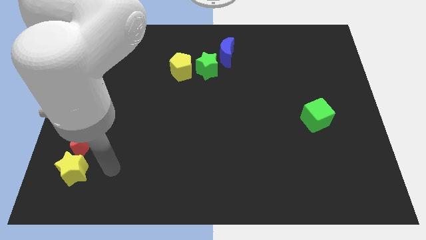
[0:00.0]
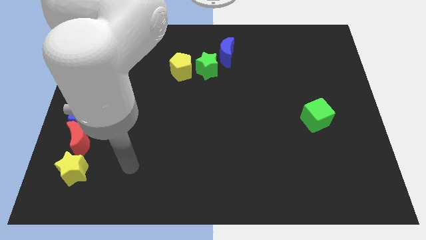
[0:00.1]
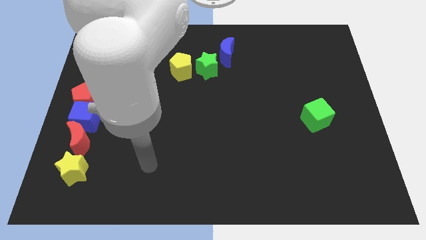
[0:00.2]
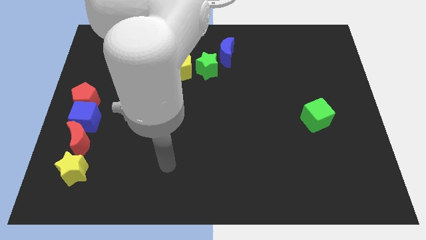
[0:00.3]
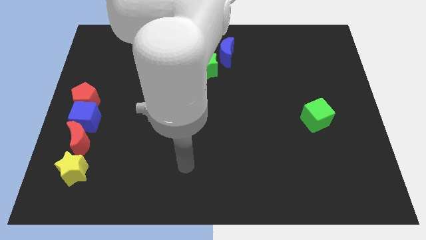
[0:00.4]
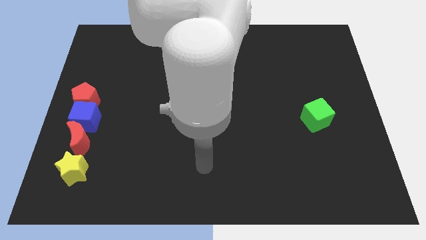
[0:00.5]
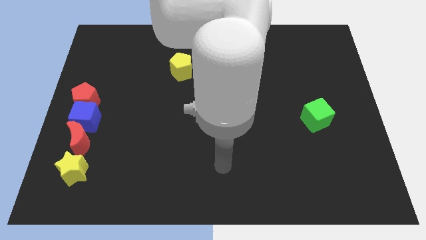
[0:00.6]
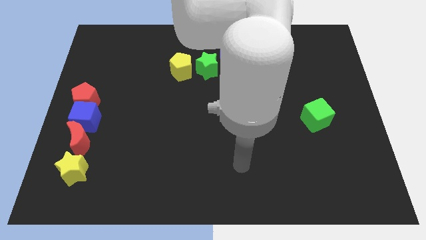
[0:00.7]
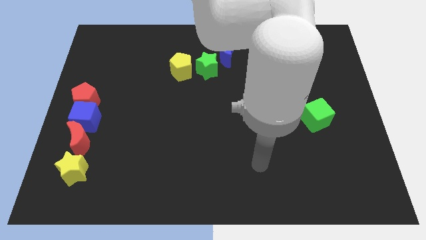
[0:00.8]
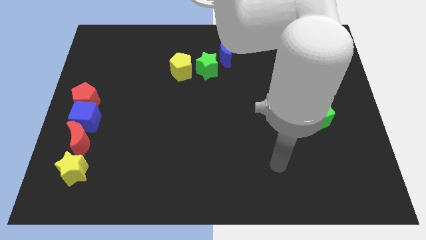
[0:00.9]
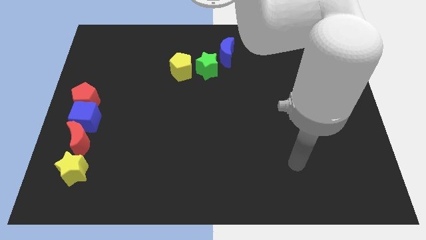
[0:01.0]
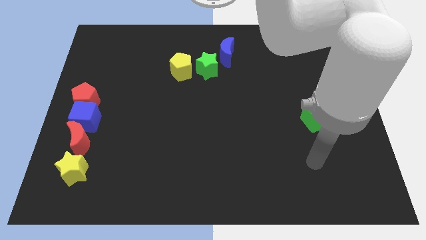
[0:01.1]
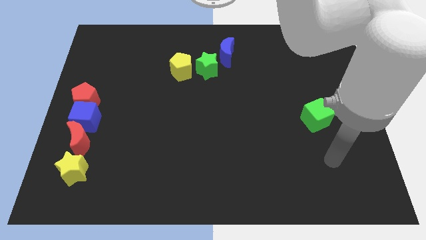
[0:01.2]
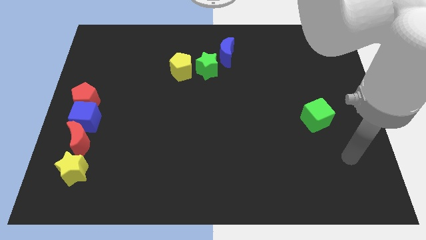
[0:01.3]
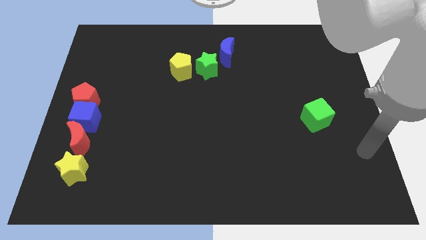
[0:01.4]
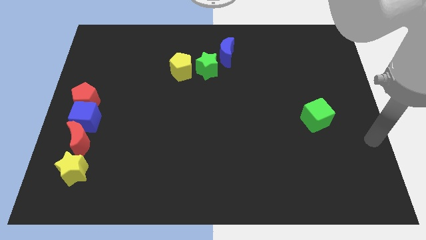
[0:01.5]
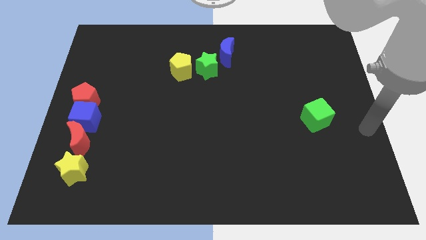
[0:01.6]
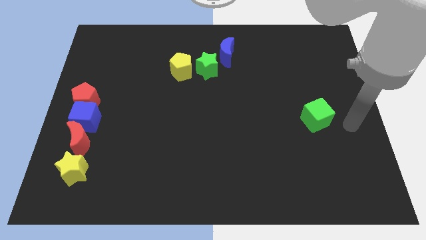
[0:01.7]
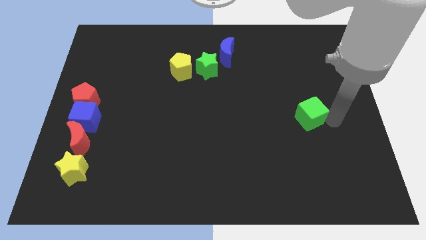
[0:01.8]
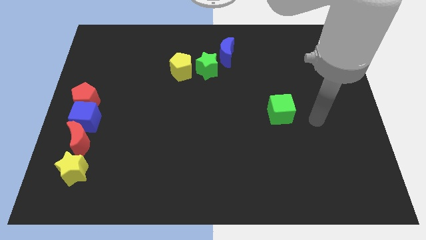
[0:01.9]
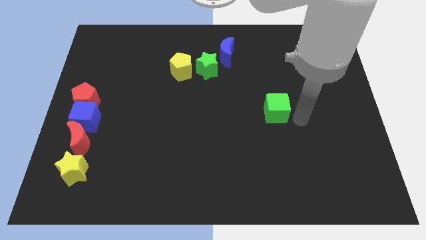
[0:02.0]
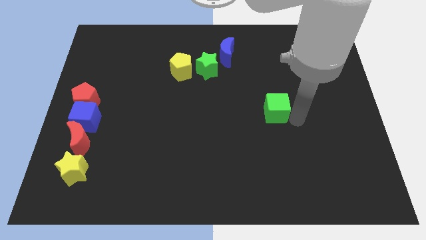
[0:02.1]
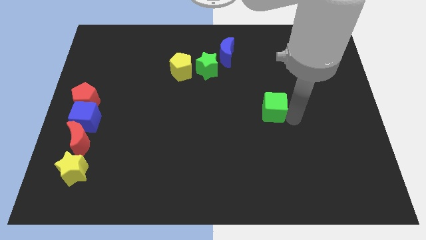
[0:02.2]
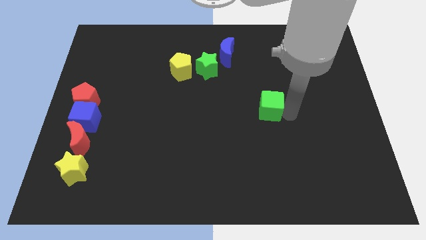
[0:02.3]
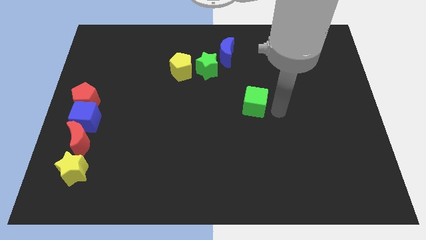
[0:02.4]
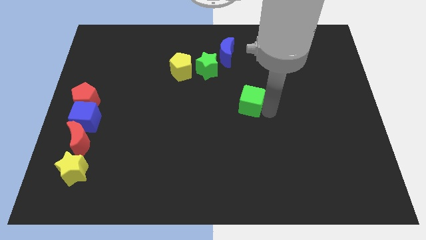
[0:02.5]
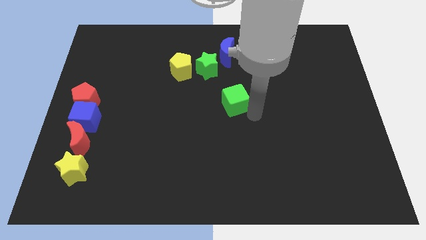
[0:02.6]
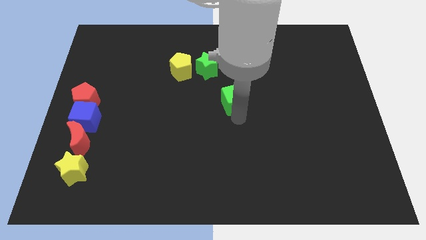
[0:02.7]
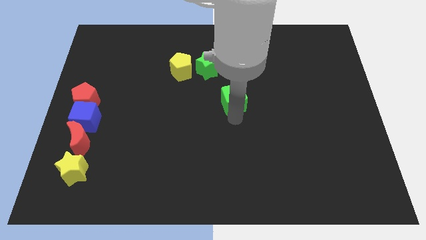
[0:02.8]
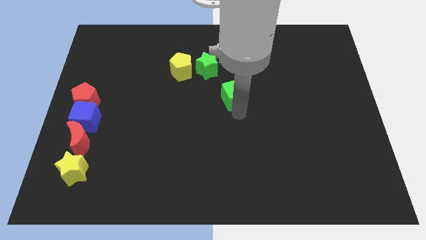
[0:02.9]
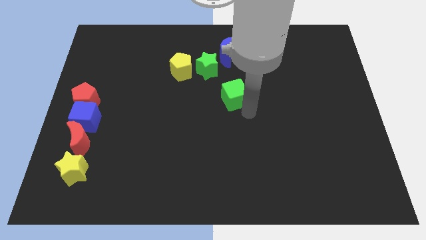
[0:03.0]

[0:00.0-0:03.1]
place the green cube vertically under the blue crescent

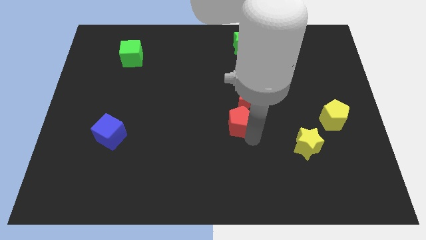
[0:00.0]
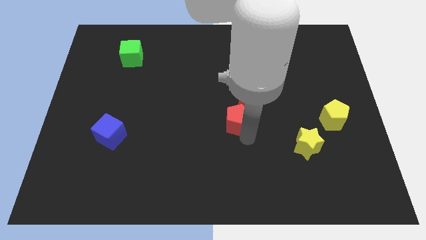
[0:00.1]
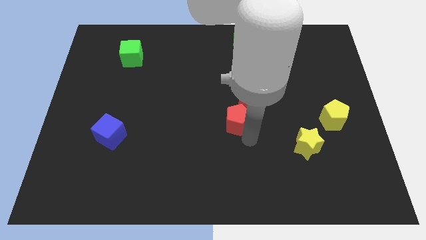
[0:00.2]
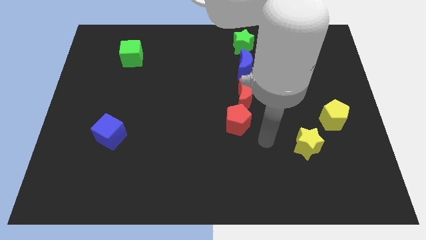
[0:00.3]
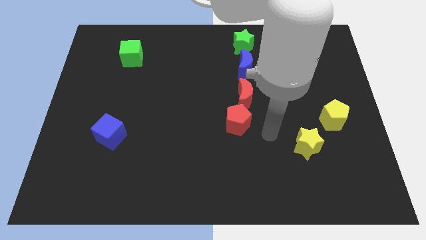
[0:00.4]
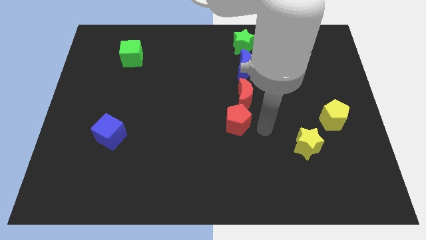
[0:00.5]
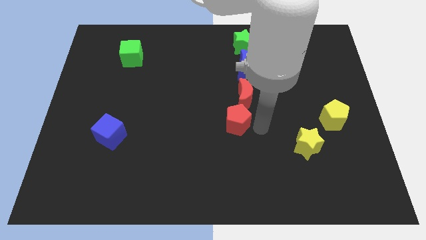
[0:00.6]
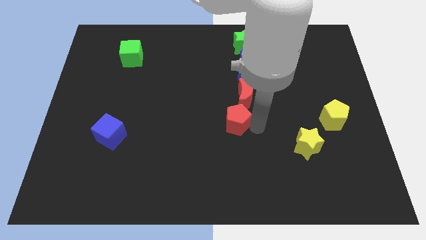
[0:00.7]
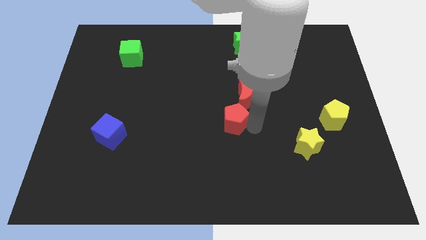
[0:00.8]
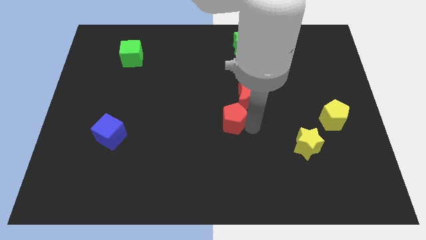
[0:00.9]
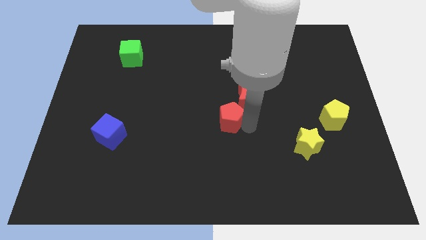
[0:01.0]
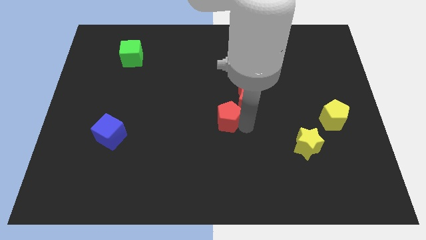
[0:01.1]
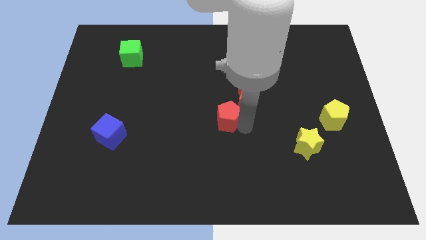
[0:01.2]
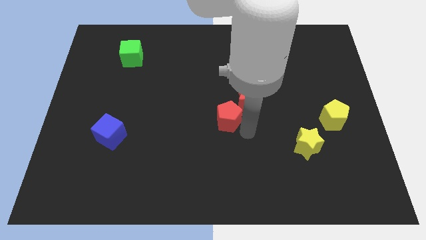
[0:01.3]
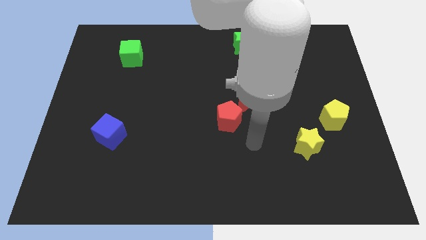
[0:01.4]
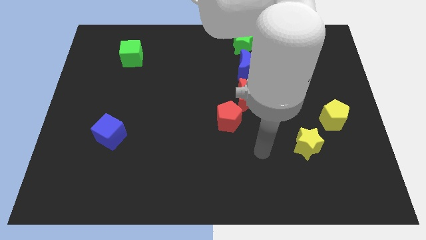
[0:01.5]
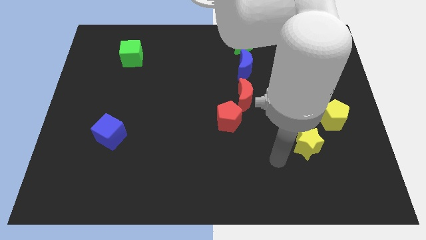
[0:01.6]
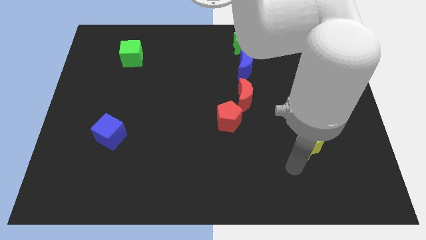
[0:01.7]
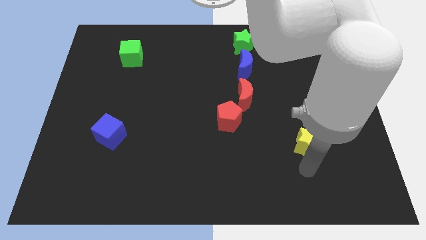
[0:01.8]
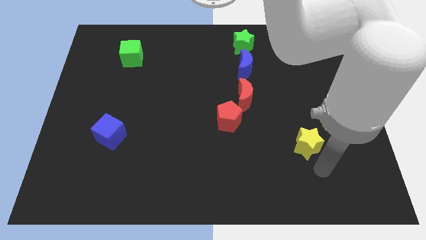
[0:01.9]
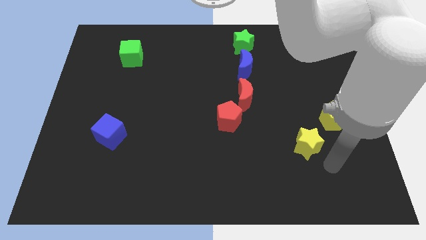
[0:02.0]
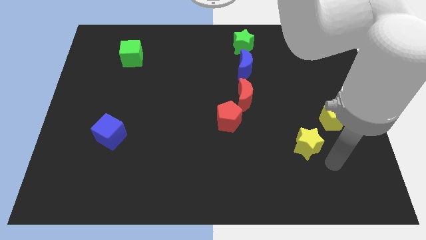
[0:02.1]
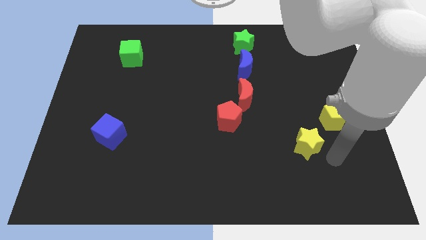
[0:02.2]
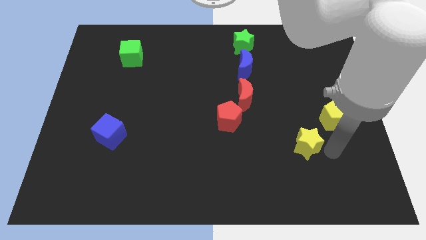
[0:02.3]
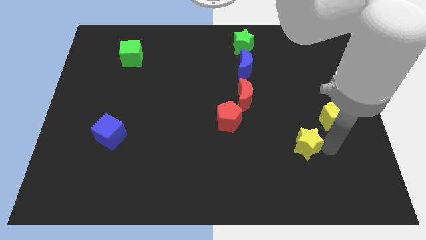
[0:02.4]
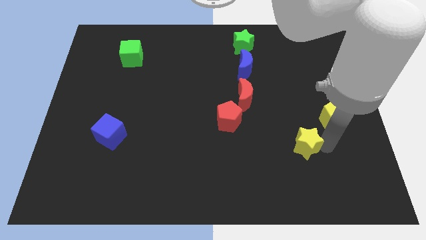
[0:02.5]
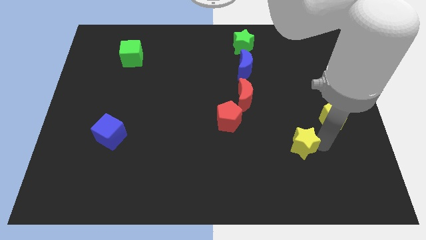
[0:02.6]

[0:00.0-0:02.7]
place the arm right to the yellow star

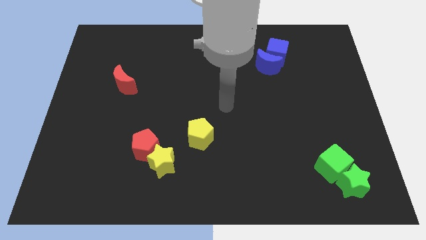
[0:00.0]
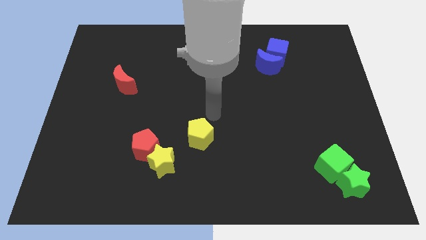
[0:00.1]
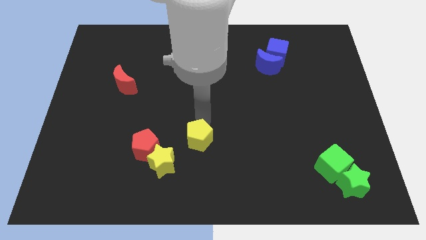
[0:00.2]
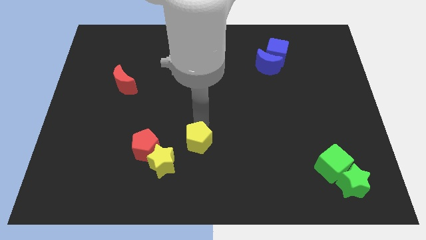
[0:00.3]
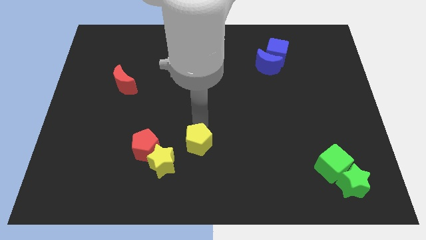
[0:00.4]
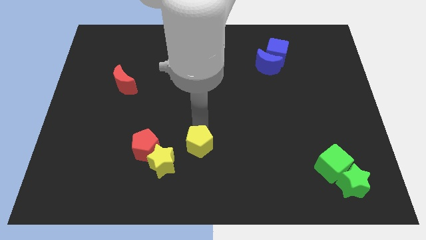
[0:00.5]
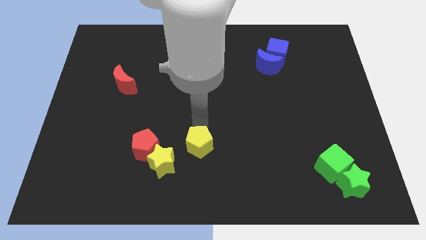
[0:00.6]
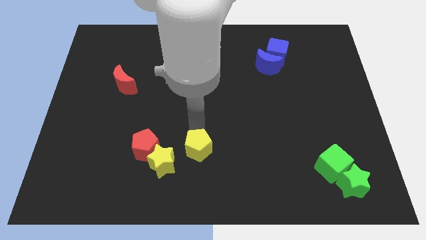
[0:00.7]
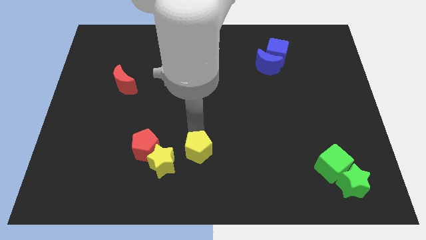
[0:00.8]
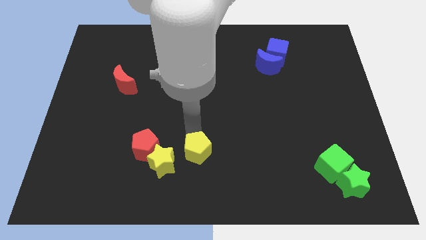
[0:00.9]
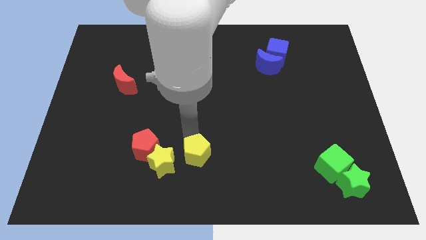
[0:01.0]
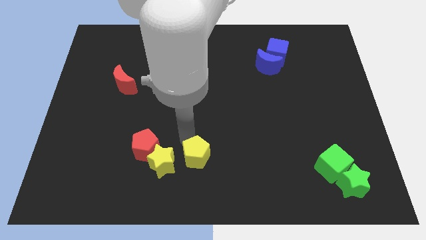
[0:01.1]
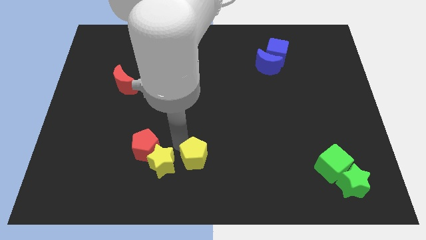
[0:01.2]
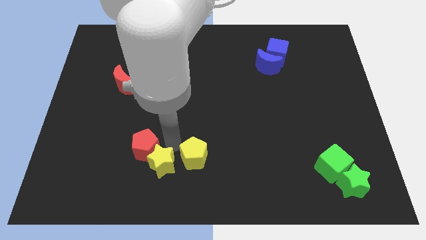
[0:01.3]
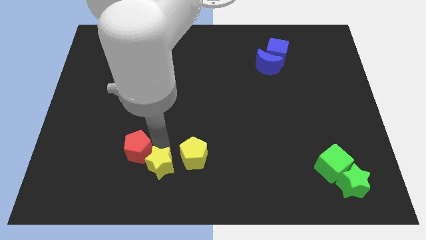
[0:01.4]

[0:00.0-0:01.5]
move the yellow pentagon downwards

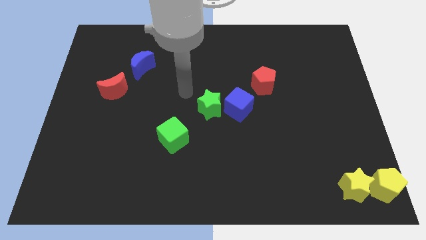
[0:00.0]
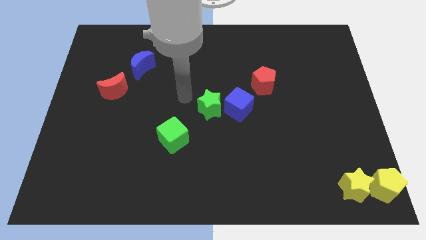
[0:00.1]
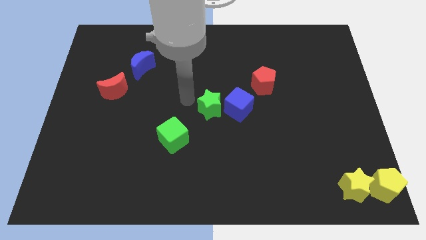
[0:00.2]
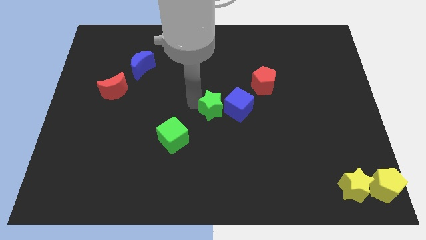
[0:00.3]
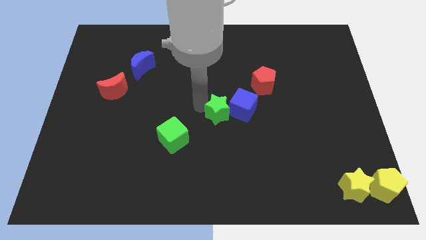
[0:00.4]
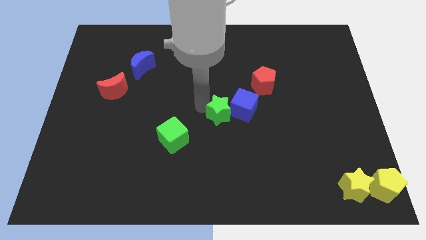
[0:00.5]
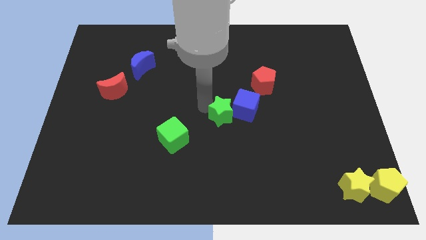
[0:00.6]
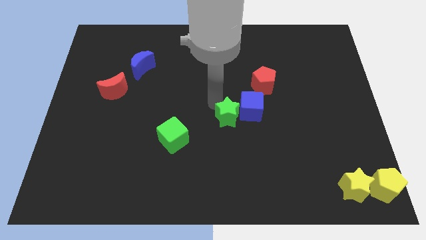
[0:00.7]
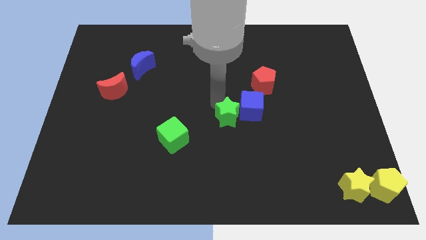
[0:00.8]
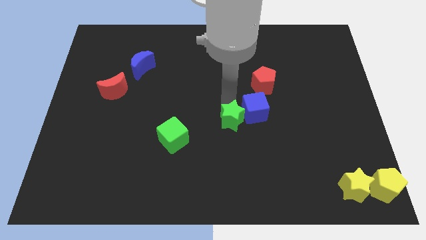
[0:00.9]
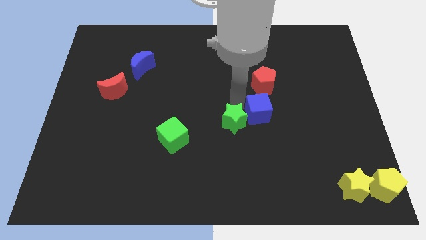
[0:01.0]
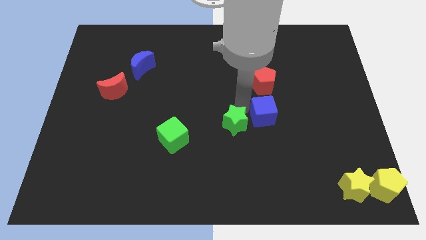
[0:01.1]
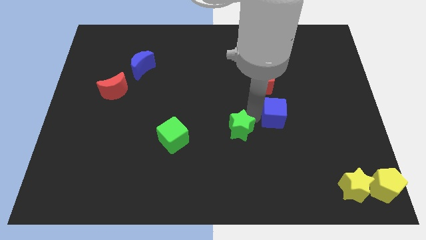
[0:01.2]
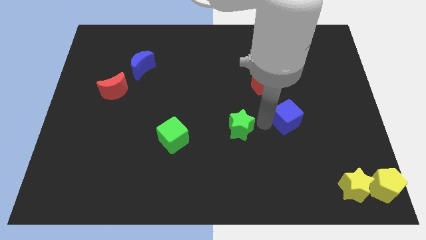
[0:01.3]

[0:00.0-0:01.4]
separate the green star from the blue cube

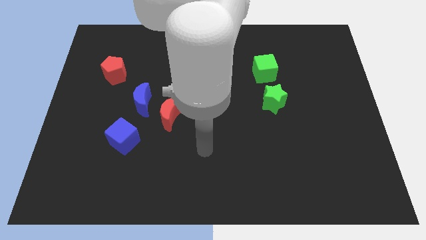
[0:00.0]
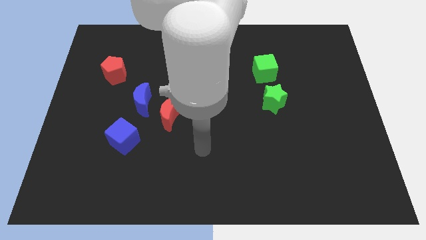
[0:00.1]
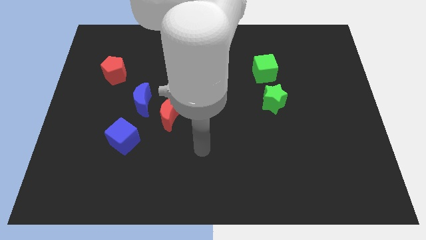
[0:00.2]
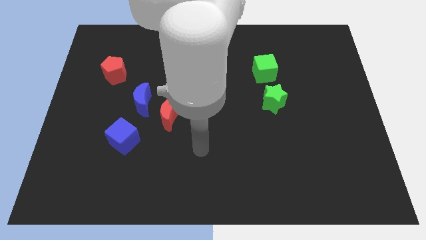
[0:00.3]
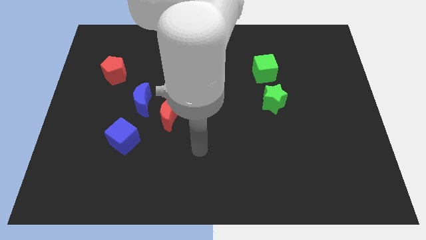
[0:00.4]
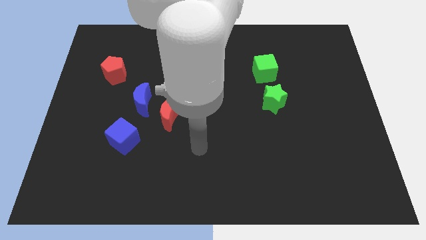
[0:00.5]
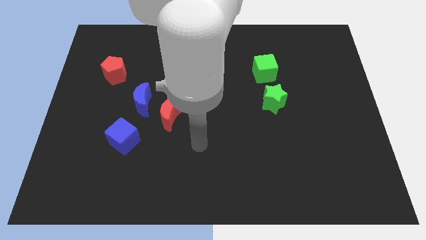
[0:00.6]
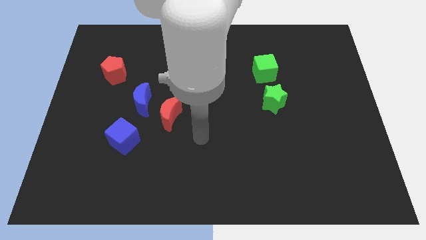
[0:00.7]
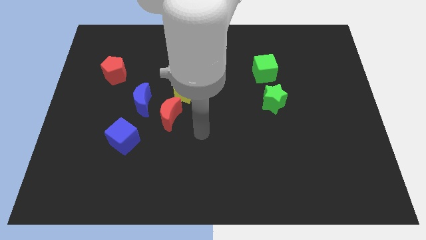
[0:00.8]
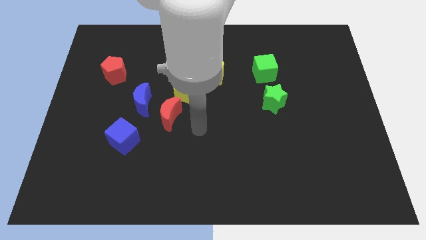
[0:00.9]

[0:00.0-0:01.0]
move arm slightly upwards
